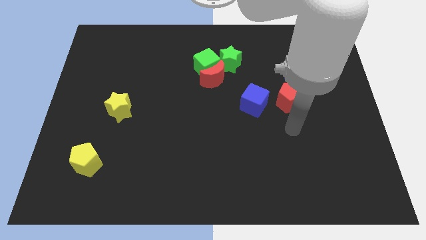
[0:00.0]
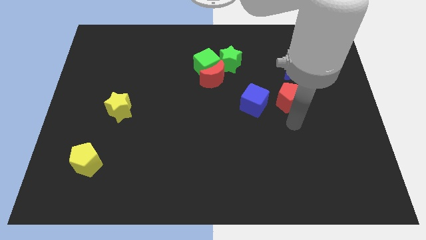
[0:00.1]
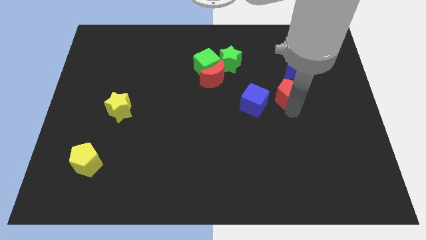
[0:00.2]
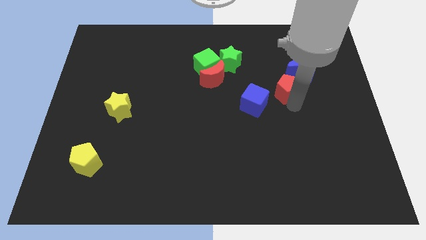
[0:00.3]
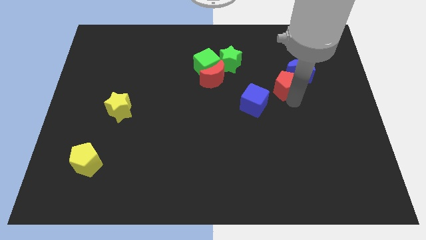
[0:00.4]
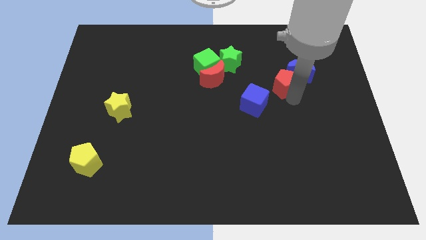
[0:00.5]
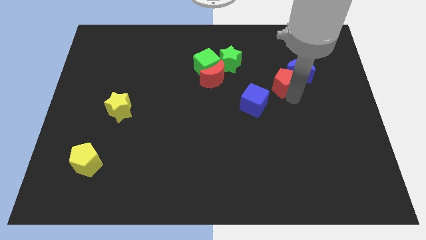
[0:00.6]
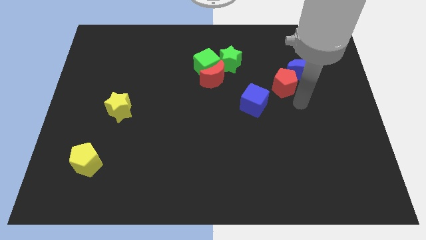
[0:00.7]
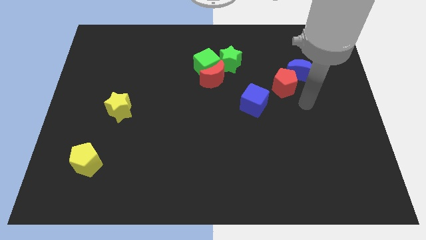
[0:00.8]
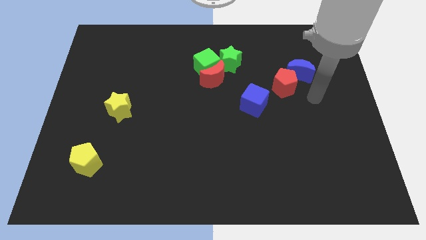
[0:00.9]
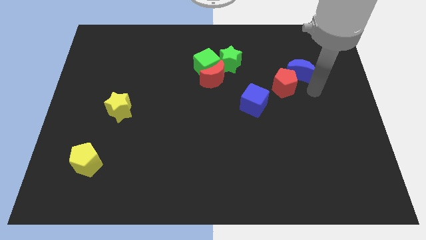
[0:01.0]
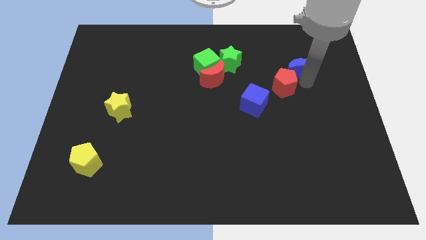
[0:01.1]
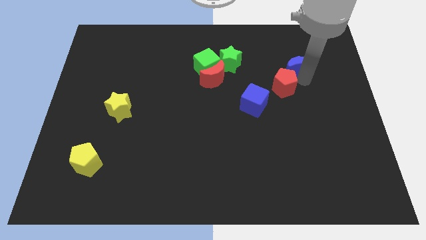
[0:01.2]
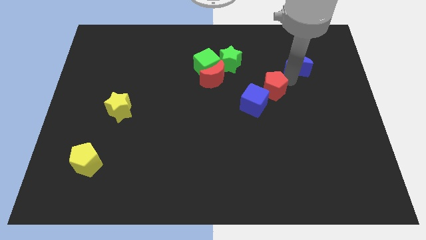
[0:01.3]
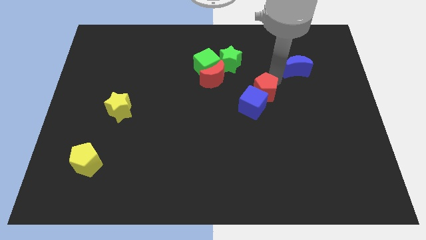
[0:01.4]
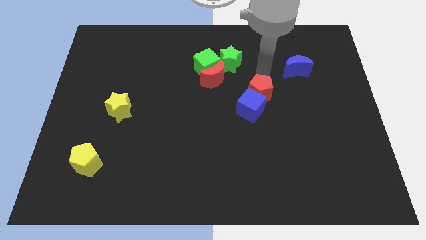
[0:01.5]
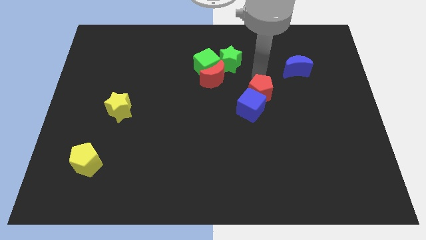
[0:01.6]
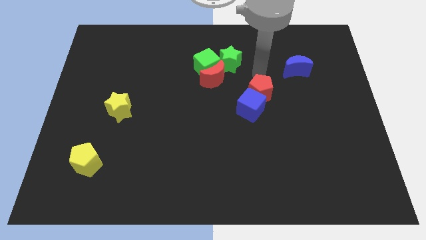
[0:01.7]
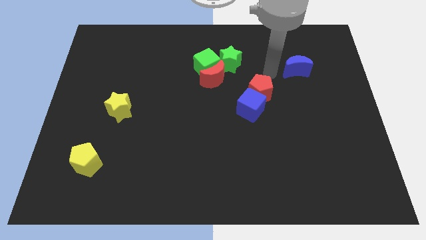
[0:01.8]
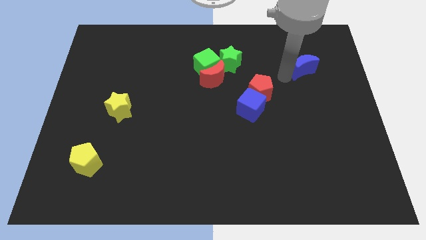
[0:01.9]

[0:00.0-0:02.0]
place the red pentagon to the right side of the blue cube

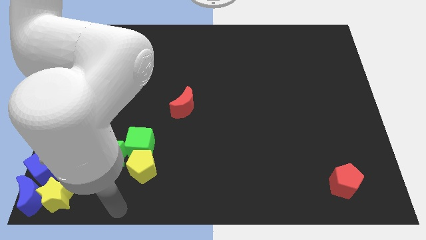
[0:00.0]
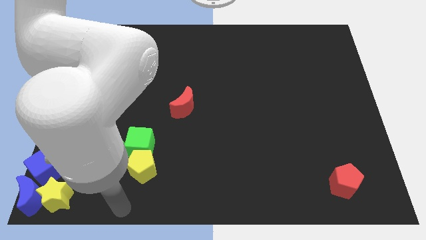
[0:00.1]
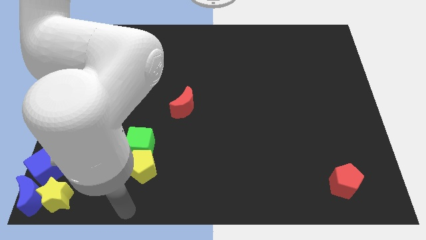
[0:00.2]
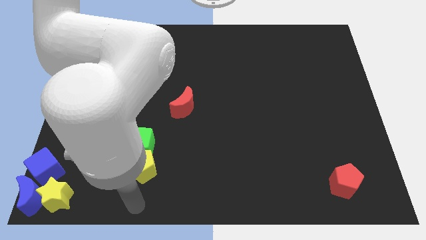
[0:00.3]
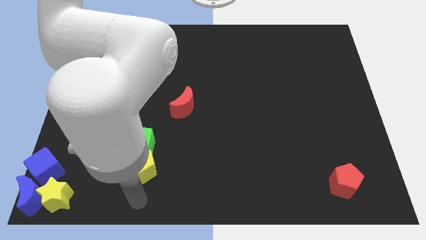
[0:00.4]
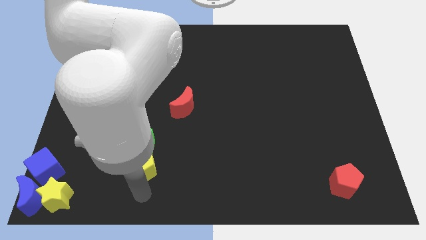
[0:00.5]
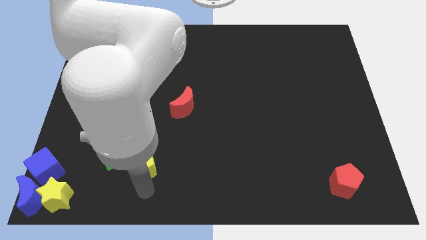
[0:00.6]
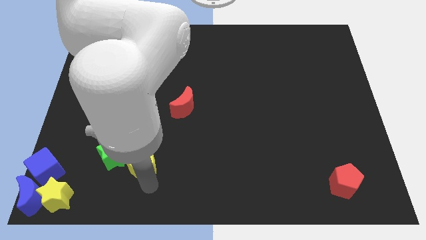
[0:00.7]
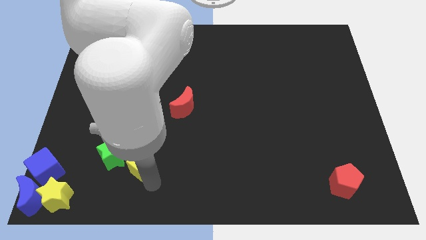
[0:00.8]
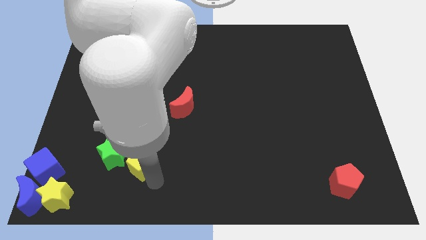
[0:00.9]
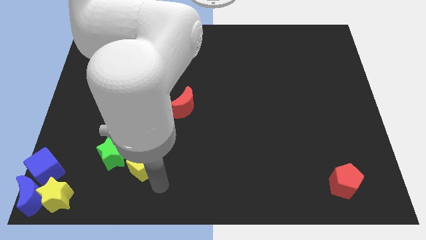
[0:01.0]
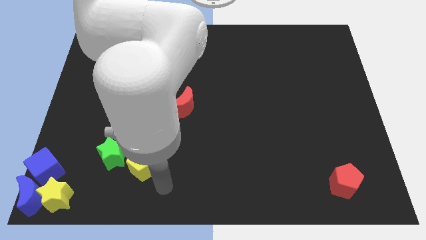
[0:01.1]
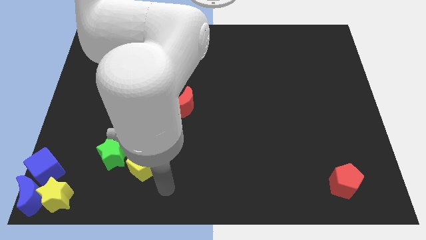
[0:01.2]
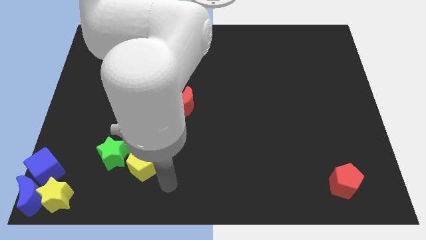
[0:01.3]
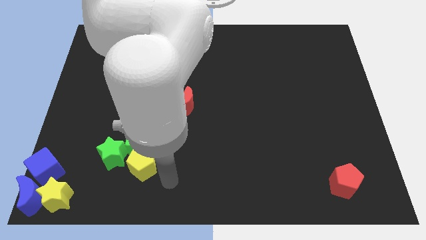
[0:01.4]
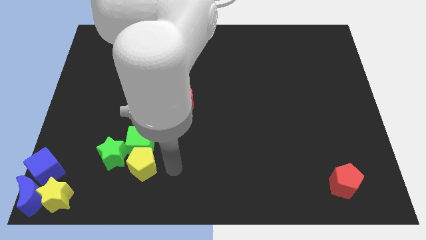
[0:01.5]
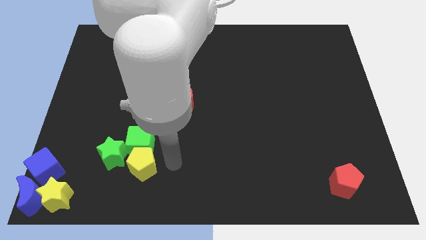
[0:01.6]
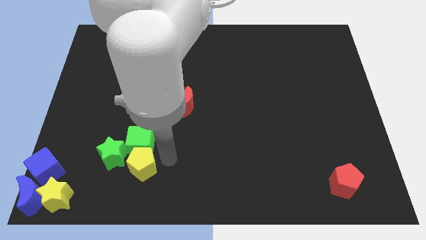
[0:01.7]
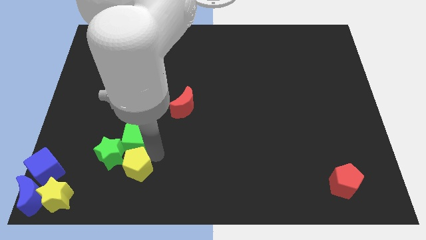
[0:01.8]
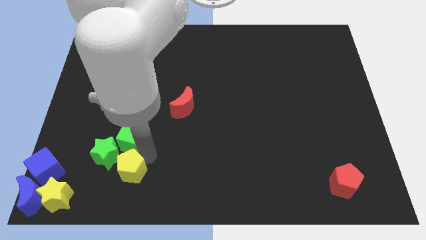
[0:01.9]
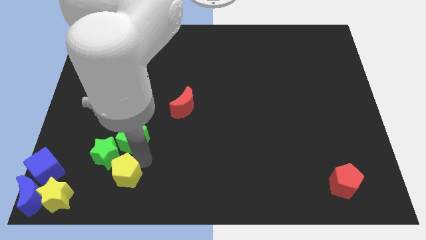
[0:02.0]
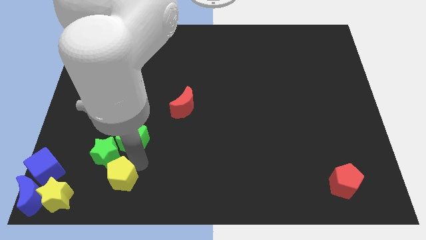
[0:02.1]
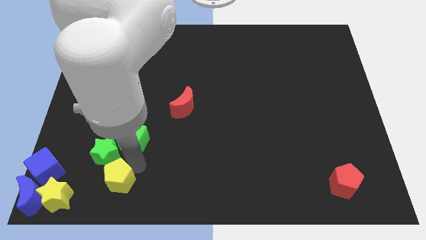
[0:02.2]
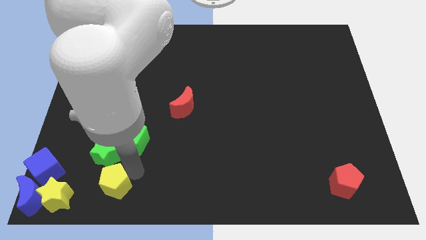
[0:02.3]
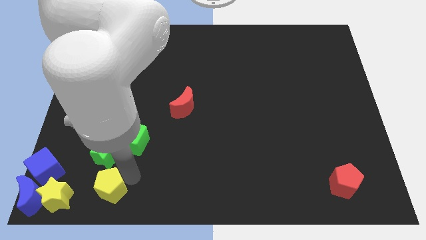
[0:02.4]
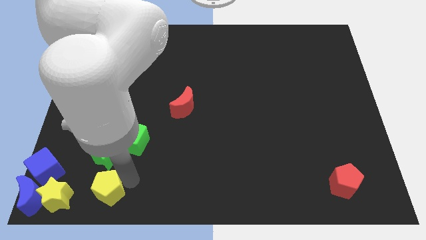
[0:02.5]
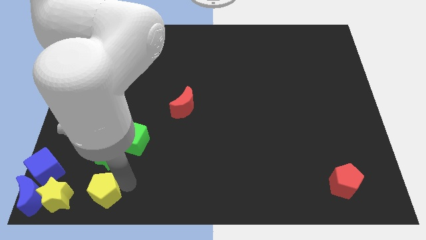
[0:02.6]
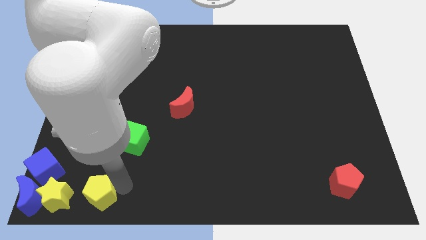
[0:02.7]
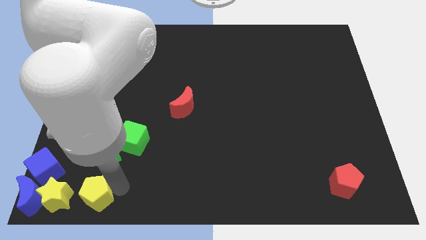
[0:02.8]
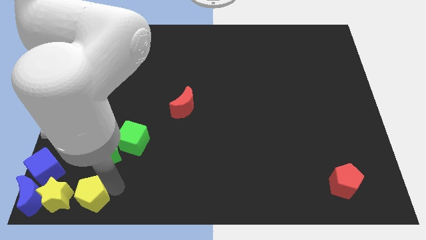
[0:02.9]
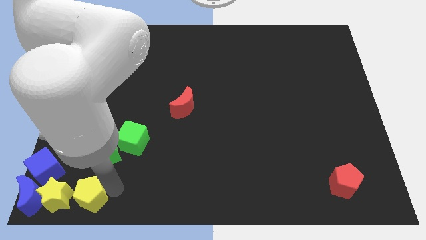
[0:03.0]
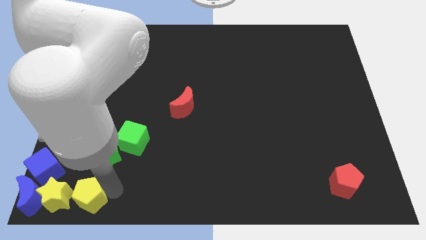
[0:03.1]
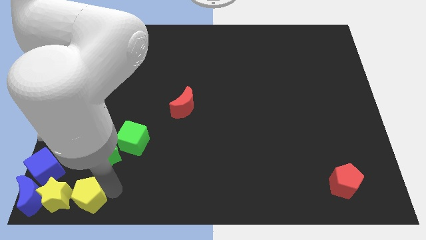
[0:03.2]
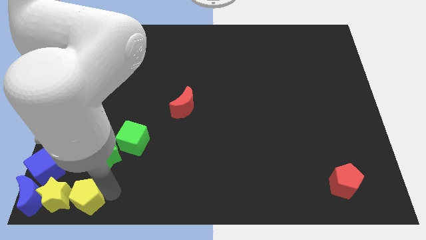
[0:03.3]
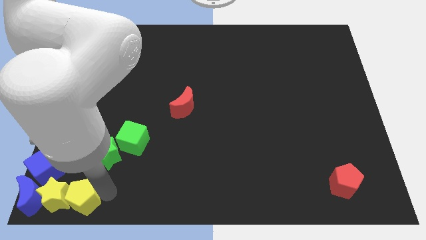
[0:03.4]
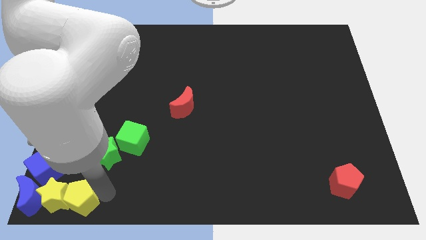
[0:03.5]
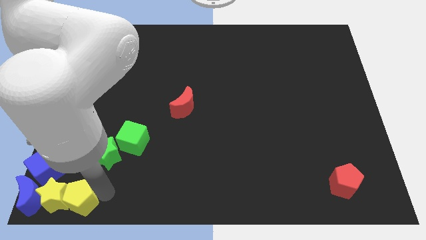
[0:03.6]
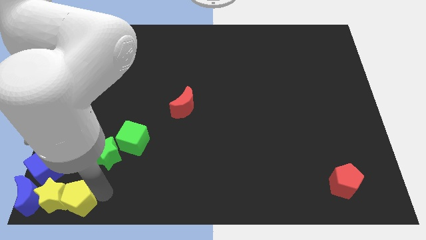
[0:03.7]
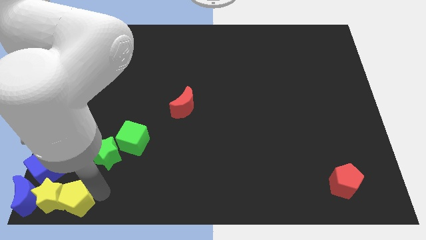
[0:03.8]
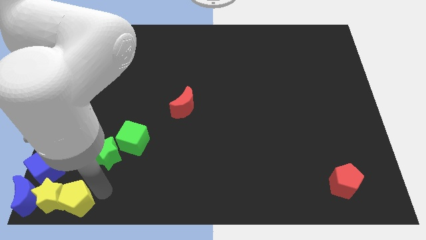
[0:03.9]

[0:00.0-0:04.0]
move the yellow pentagon into the yellow star

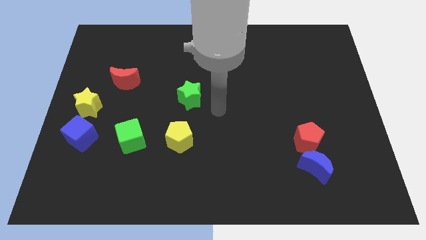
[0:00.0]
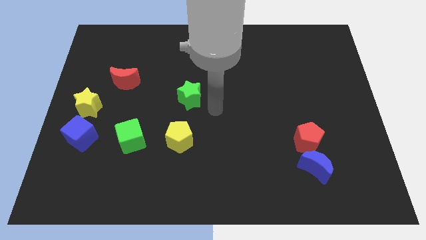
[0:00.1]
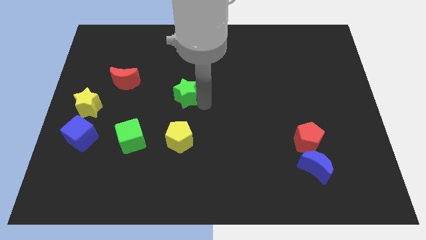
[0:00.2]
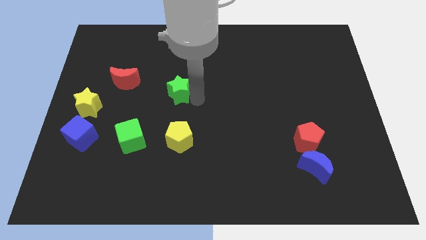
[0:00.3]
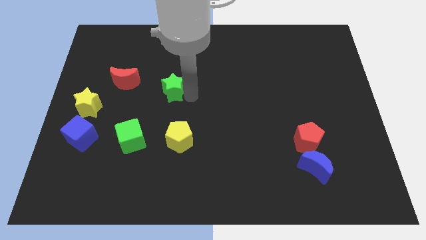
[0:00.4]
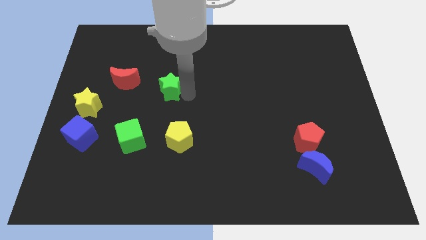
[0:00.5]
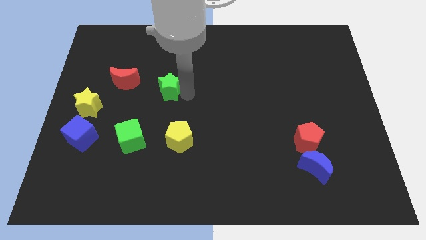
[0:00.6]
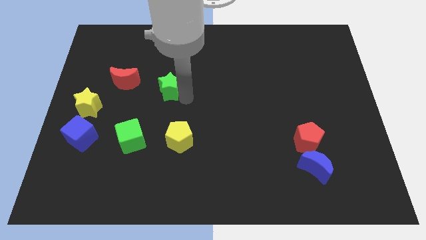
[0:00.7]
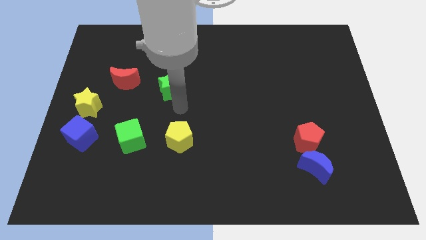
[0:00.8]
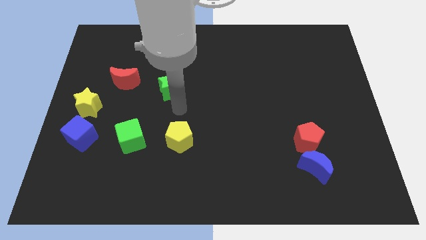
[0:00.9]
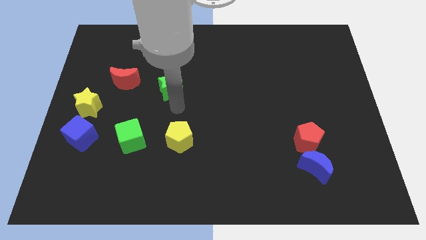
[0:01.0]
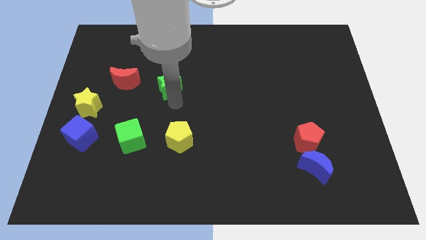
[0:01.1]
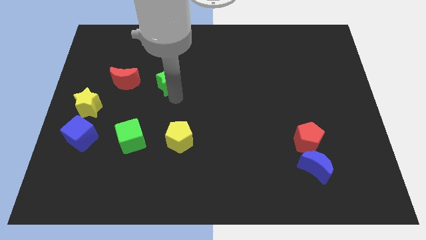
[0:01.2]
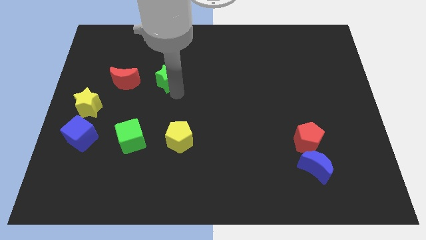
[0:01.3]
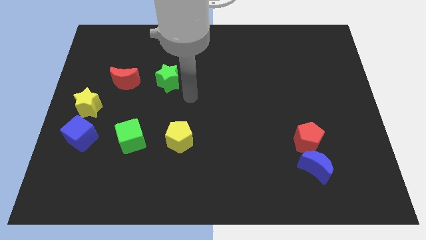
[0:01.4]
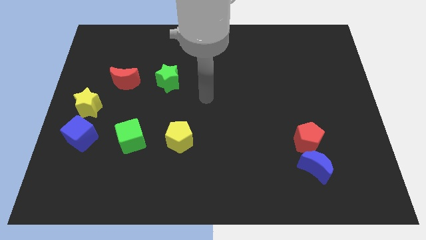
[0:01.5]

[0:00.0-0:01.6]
push the green star to the right of the red crescent

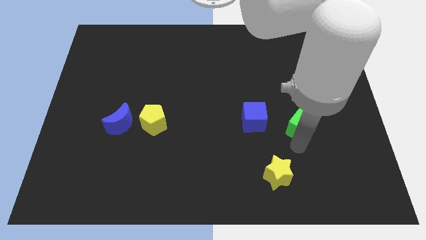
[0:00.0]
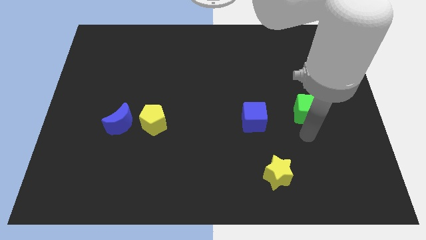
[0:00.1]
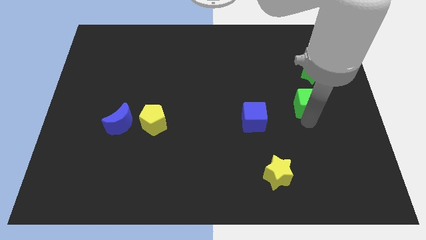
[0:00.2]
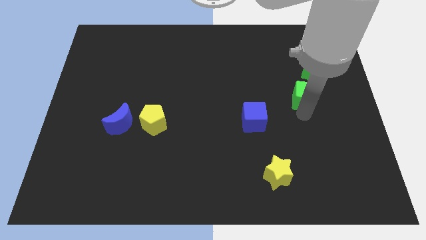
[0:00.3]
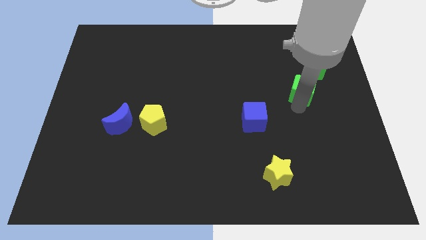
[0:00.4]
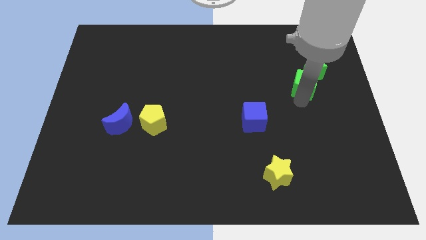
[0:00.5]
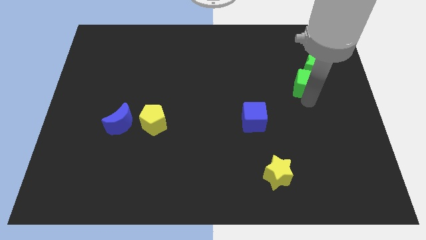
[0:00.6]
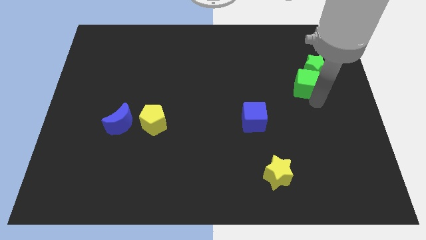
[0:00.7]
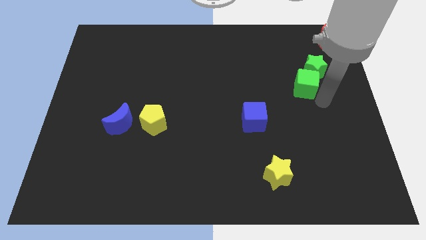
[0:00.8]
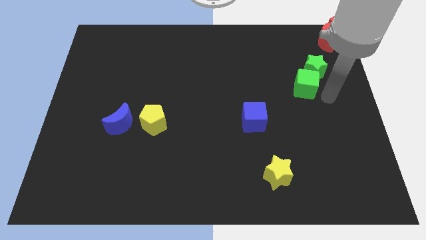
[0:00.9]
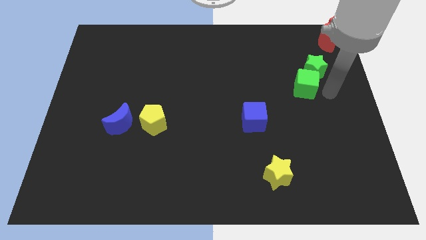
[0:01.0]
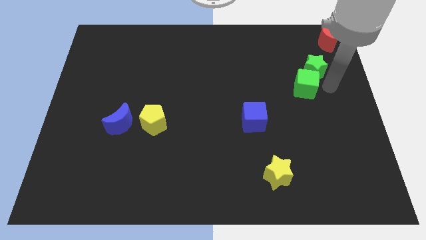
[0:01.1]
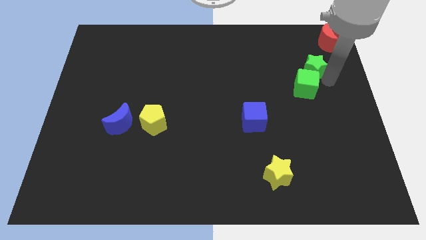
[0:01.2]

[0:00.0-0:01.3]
drag the green cube slightly upwards
